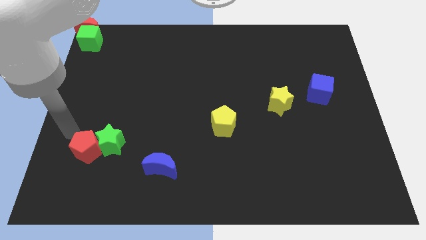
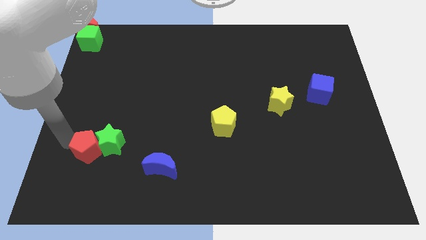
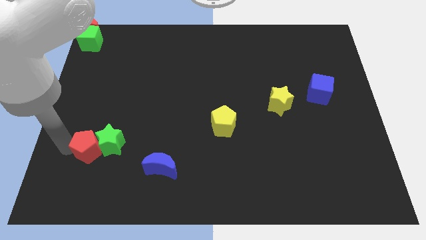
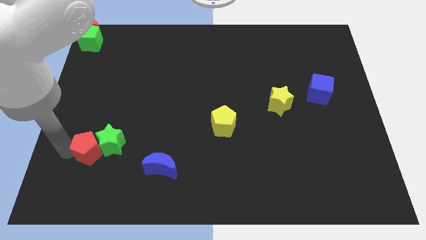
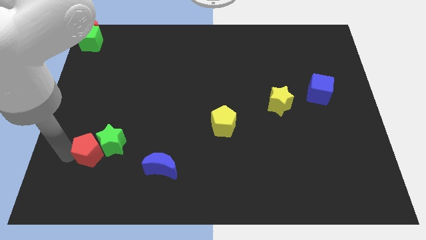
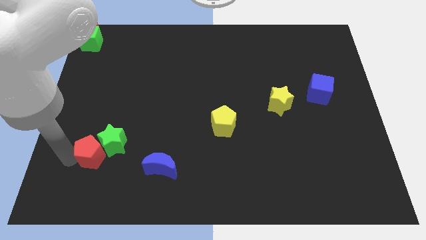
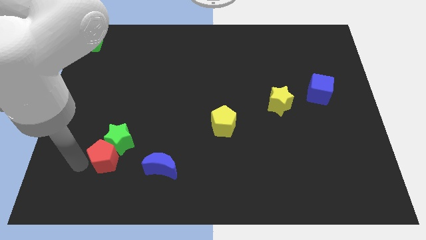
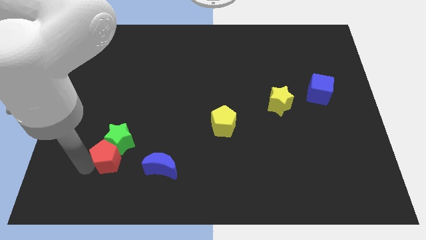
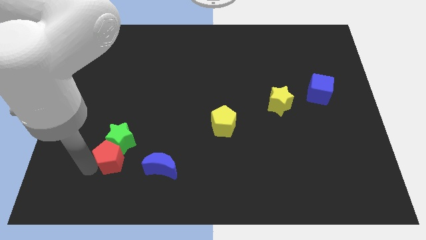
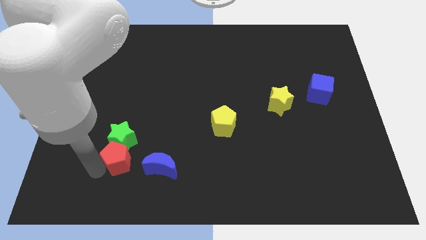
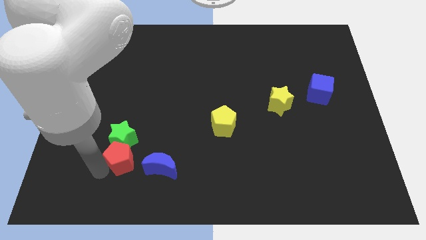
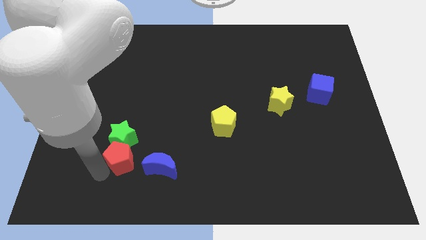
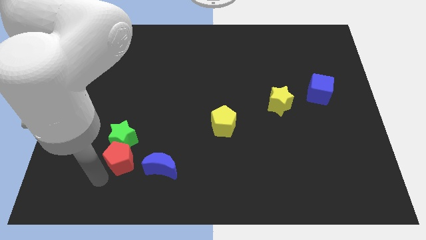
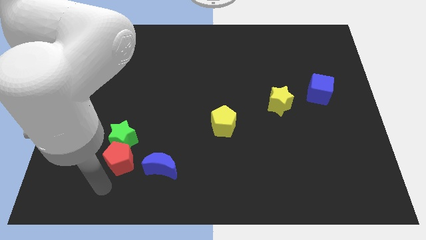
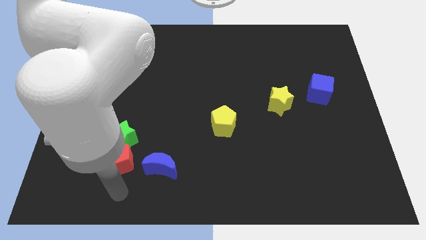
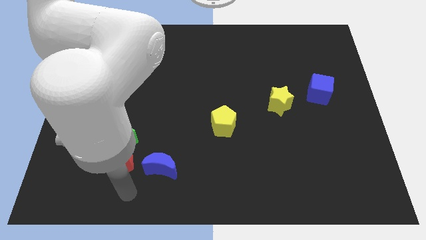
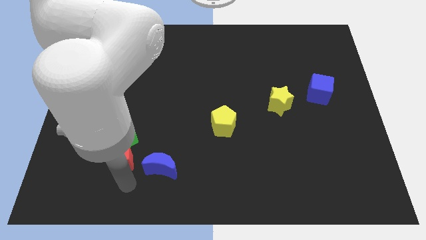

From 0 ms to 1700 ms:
place the red pentagon below the green star

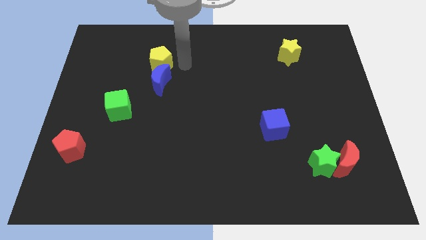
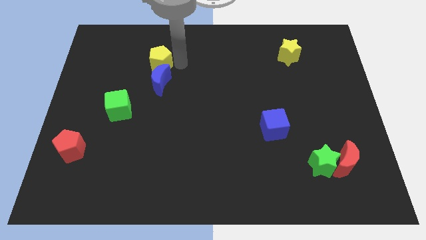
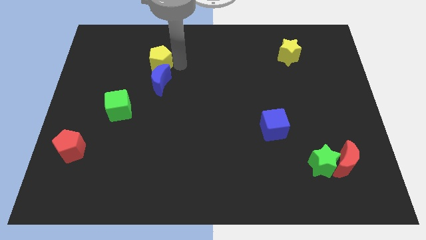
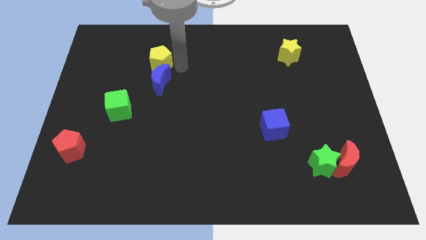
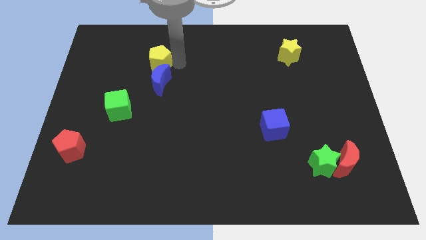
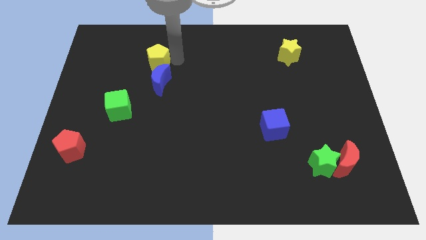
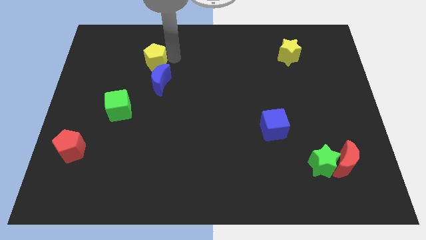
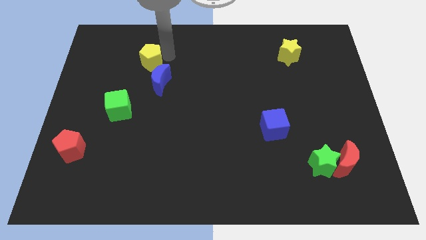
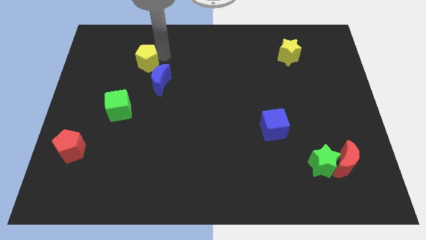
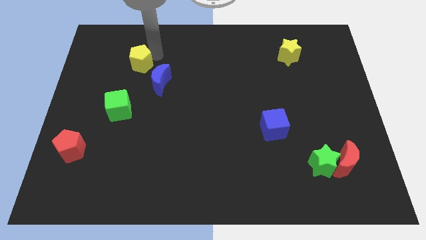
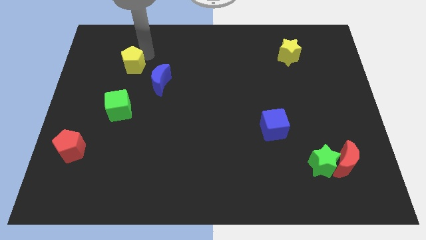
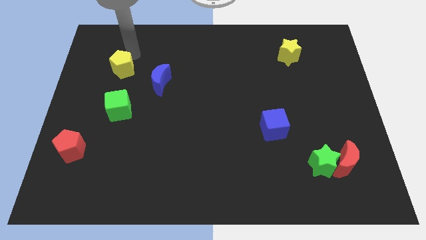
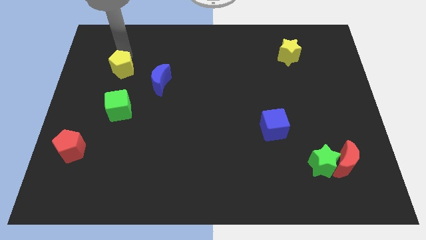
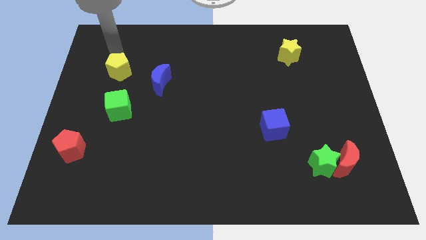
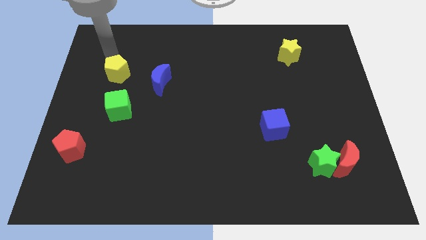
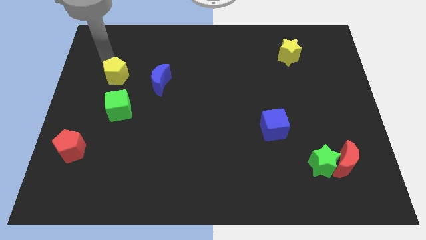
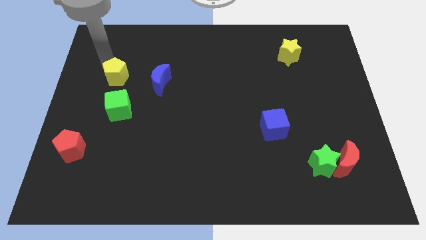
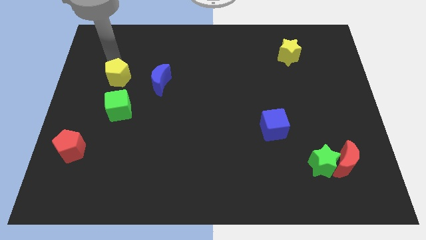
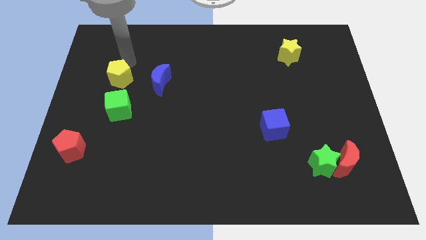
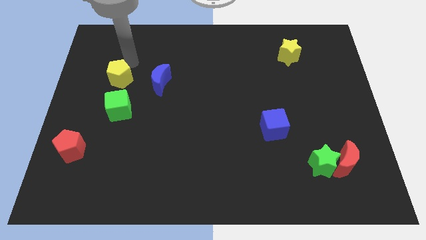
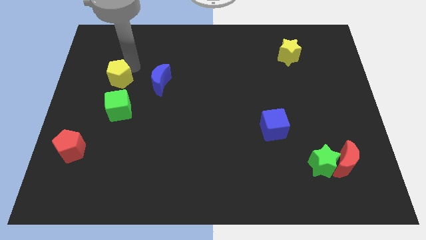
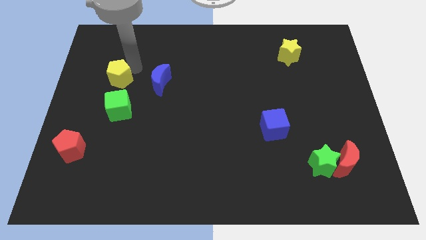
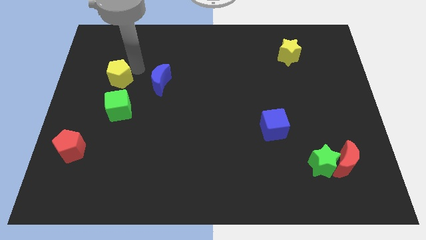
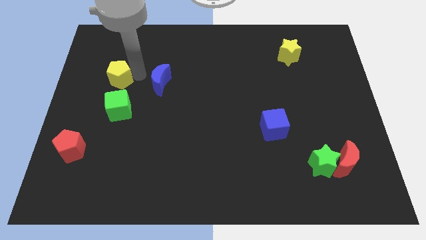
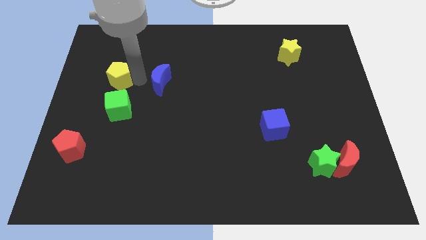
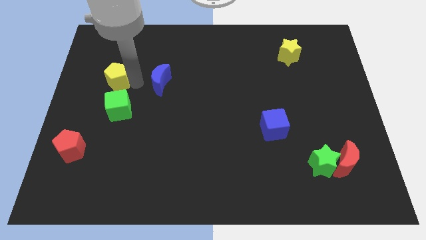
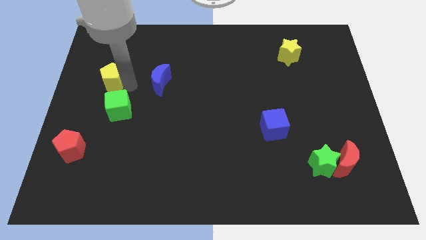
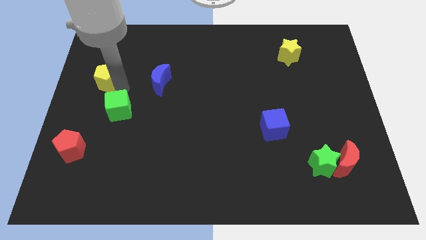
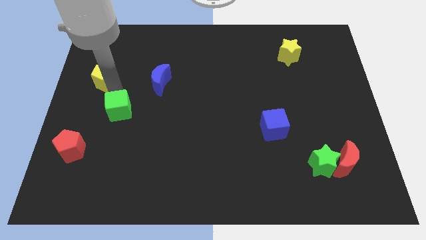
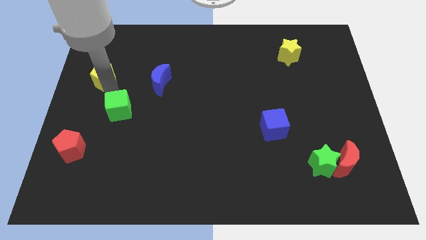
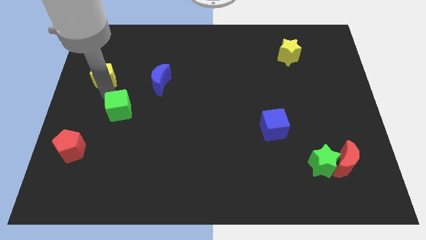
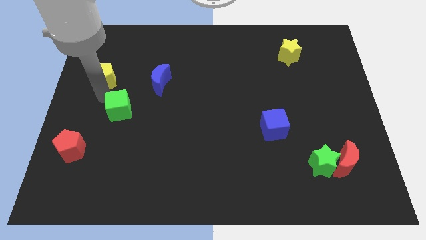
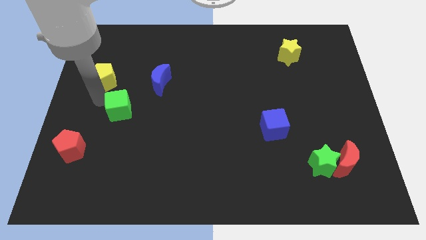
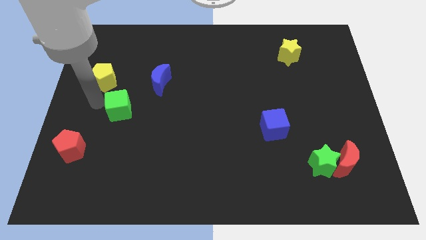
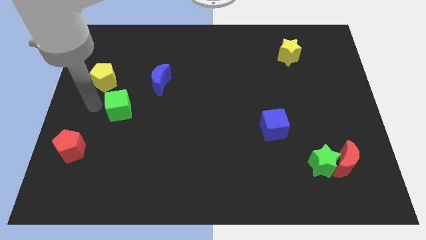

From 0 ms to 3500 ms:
move yellow pentagon from blue crescent

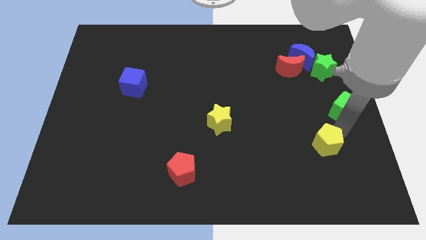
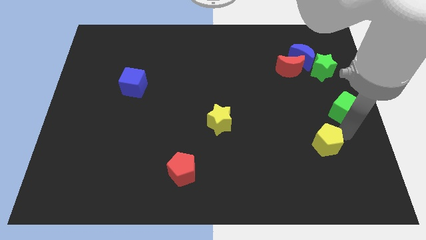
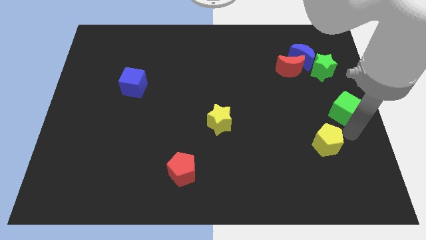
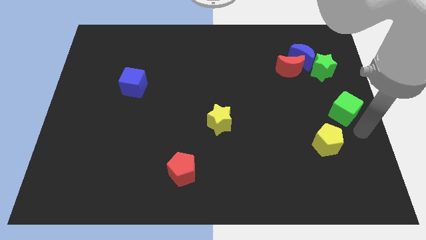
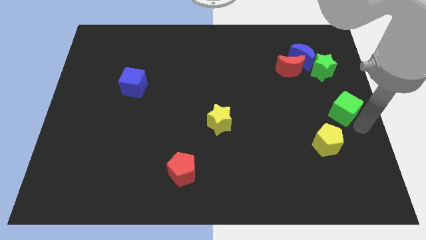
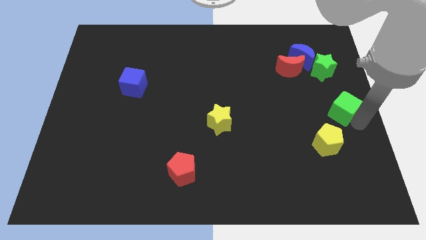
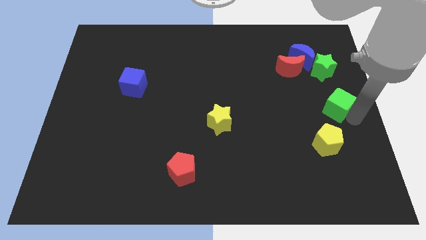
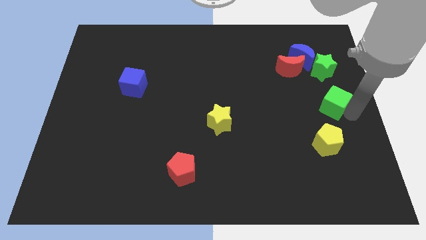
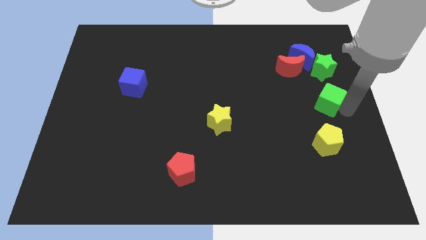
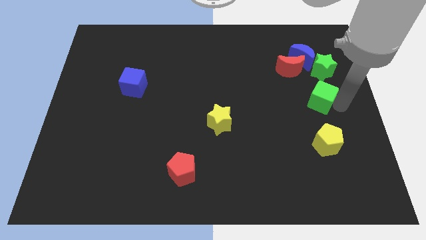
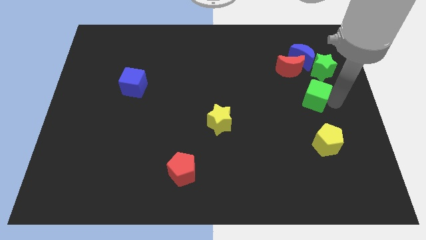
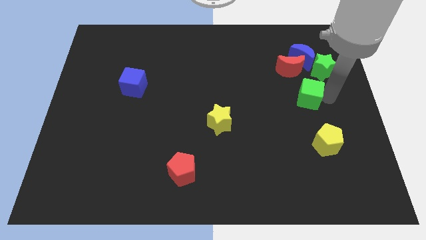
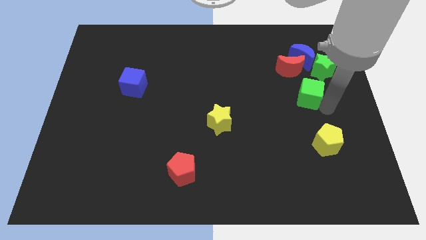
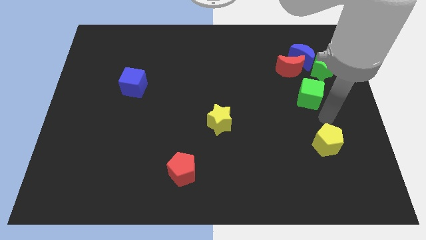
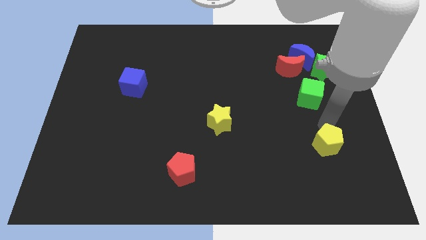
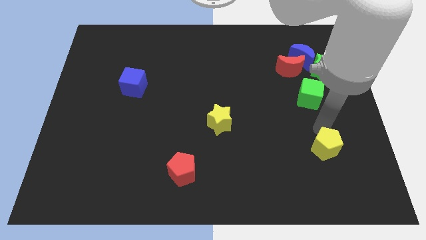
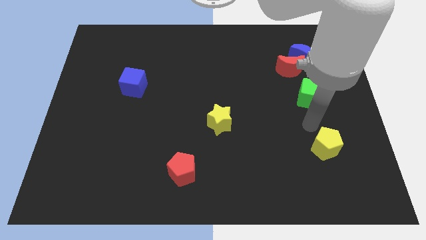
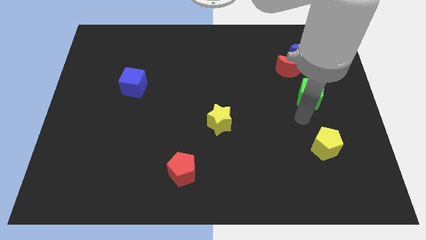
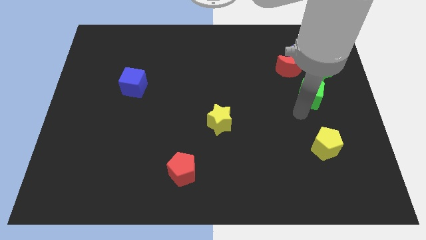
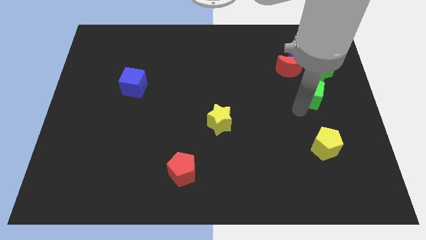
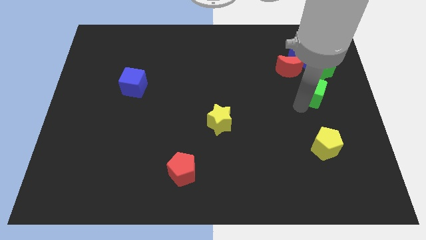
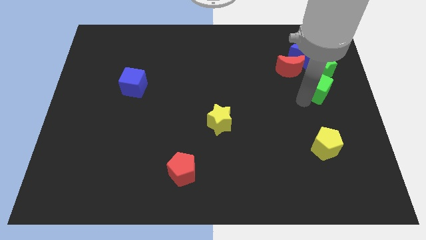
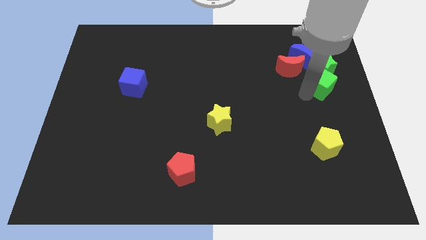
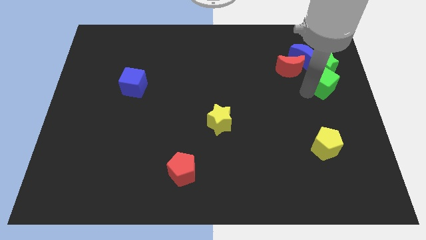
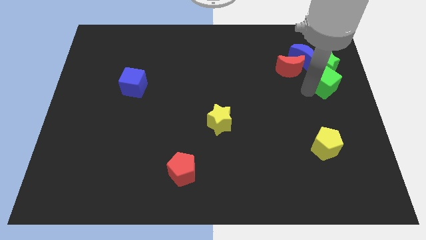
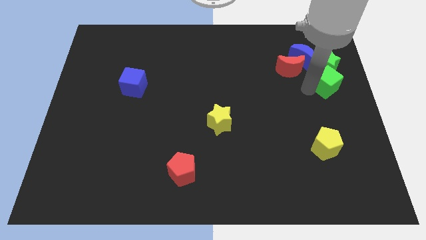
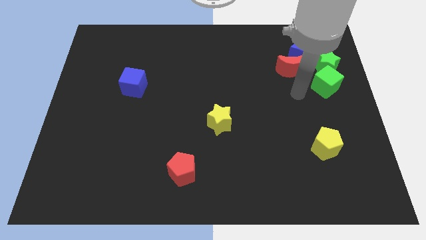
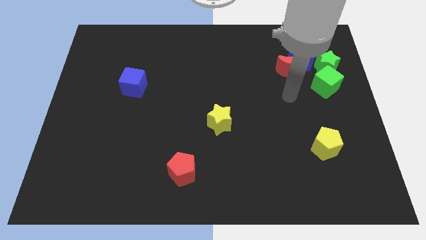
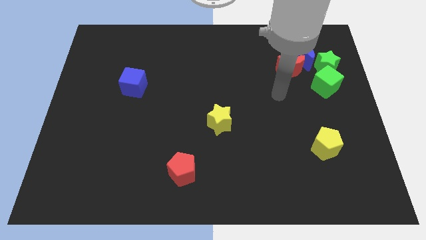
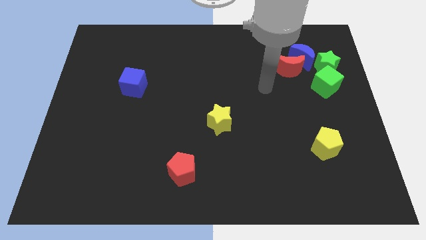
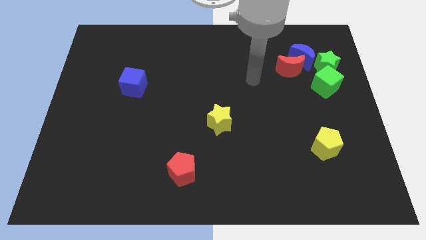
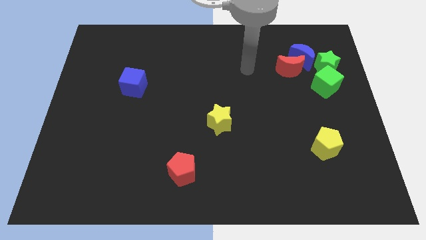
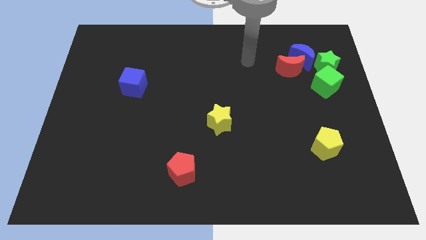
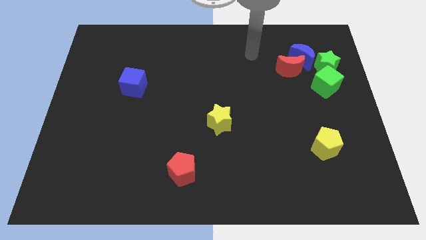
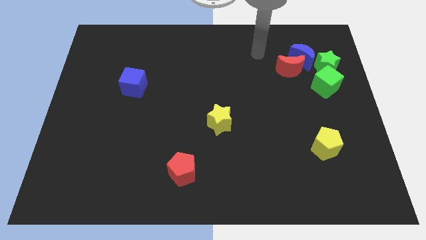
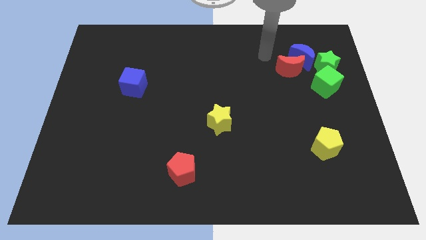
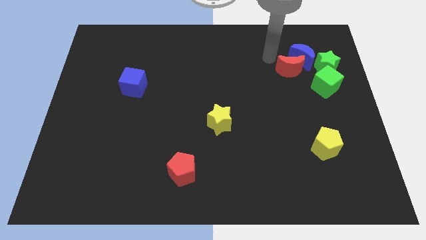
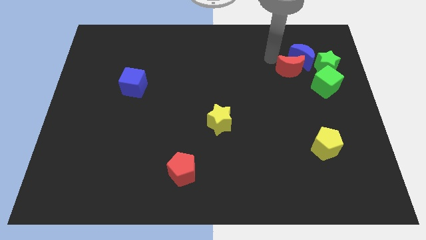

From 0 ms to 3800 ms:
move green cube below the green star
